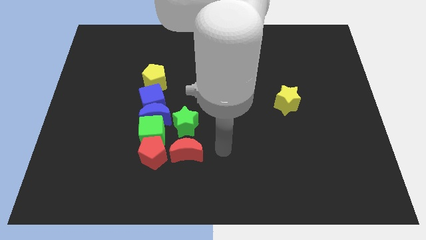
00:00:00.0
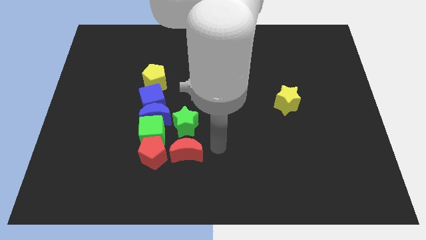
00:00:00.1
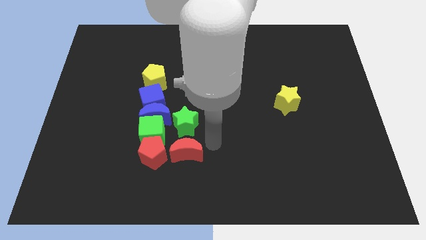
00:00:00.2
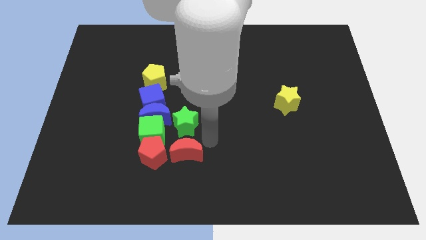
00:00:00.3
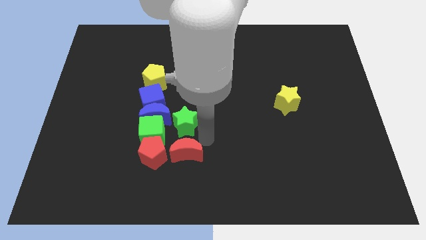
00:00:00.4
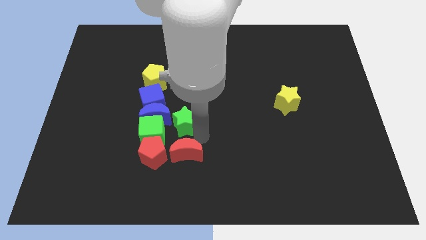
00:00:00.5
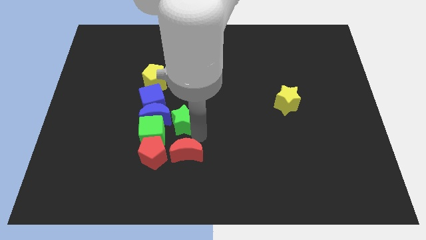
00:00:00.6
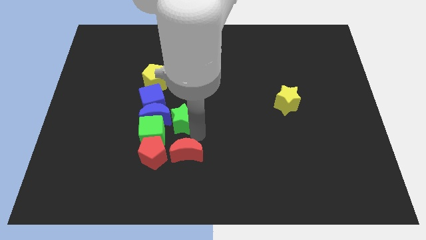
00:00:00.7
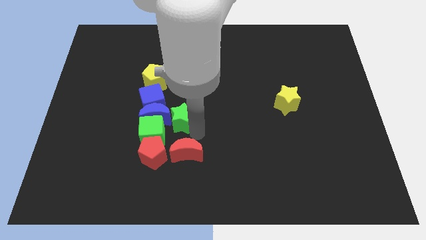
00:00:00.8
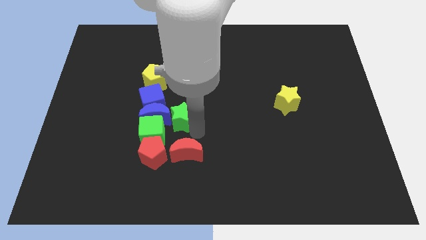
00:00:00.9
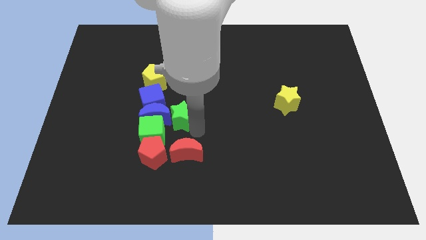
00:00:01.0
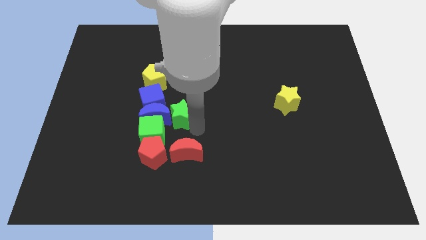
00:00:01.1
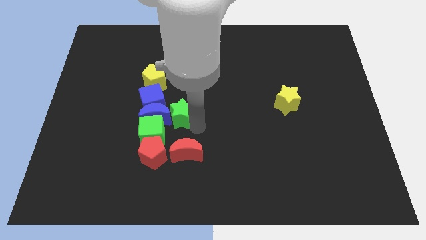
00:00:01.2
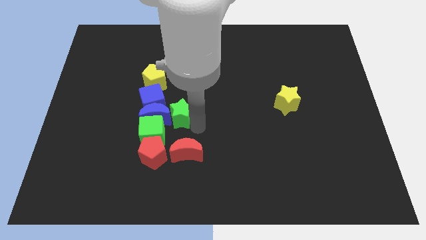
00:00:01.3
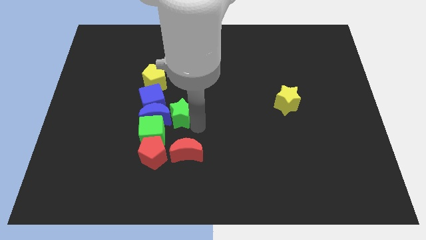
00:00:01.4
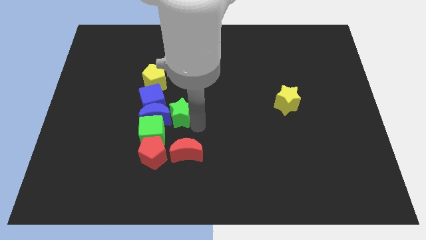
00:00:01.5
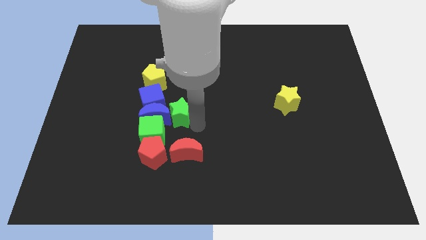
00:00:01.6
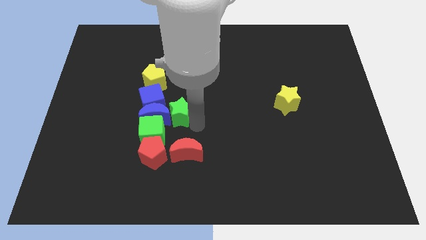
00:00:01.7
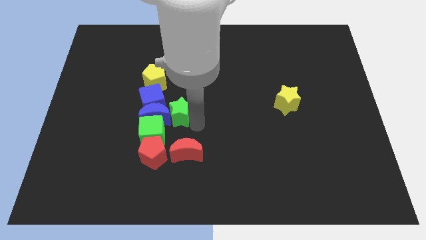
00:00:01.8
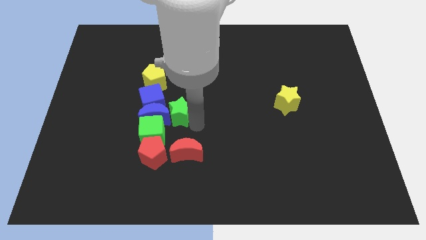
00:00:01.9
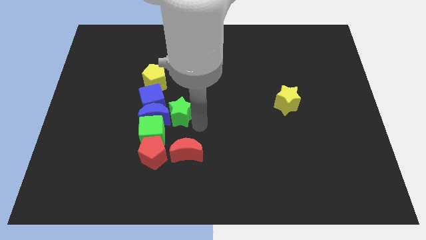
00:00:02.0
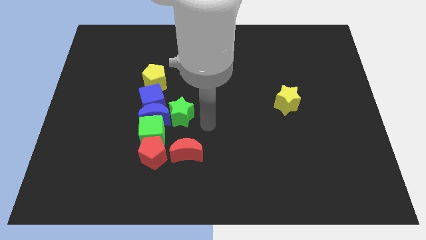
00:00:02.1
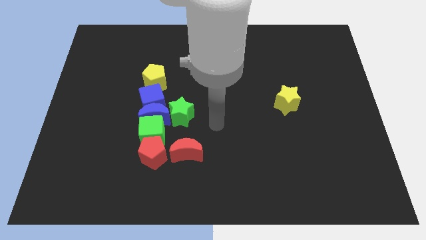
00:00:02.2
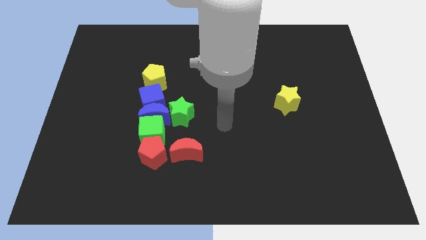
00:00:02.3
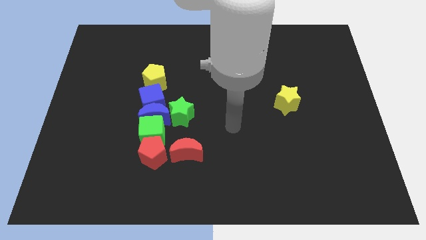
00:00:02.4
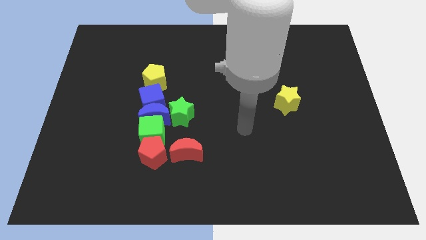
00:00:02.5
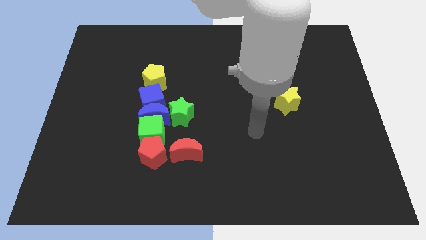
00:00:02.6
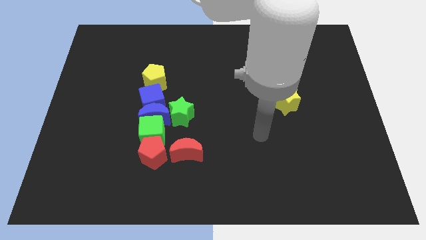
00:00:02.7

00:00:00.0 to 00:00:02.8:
move the green star close to blue crescent

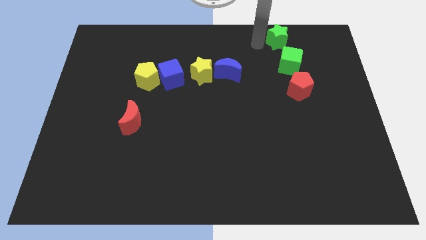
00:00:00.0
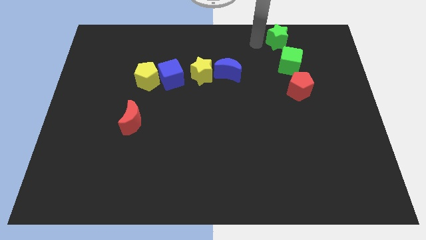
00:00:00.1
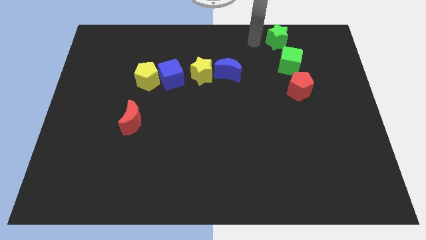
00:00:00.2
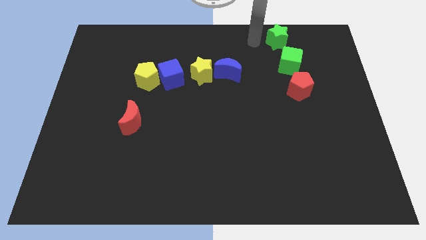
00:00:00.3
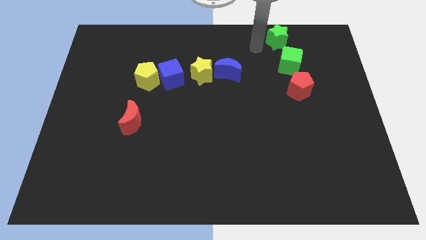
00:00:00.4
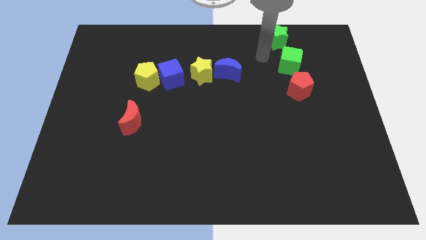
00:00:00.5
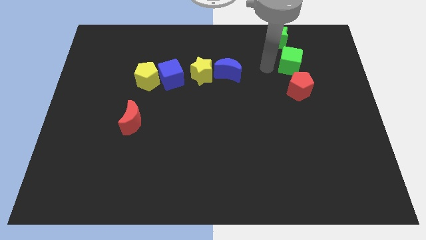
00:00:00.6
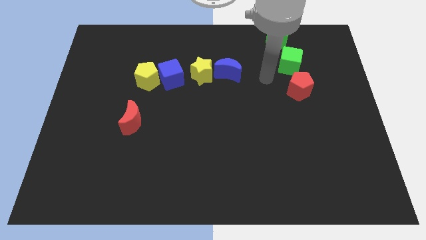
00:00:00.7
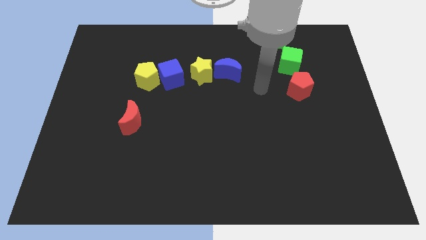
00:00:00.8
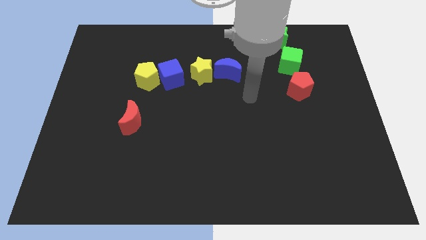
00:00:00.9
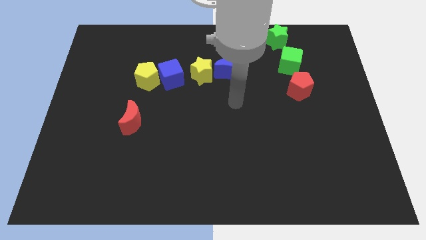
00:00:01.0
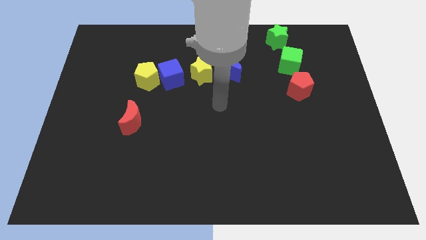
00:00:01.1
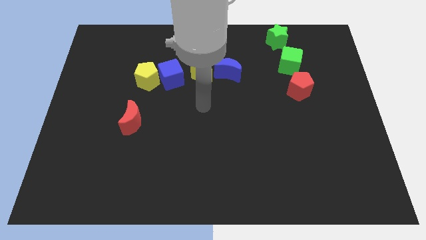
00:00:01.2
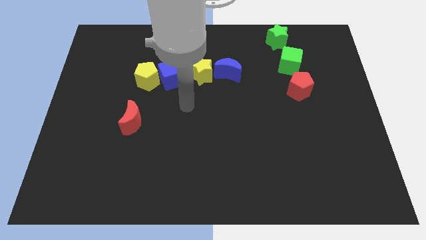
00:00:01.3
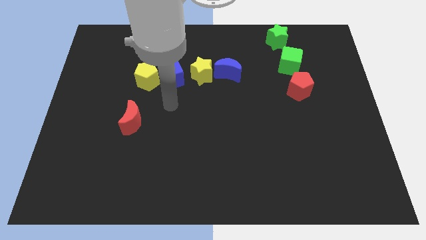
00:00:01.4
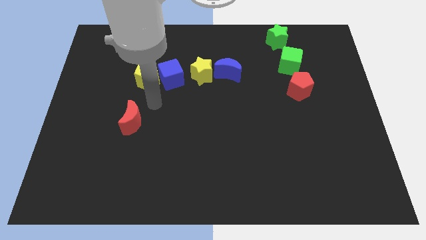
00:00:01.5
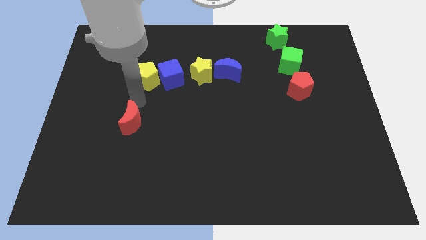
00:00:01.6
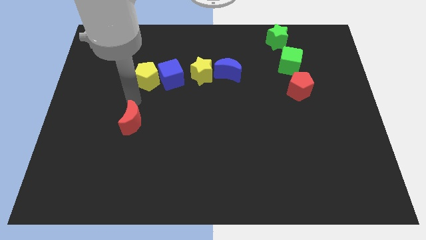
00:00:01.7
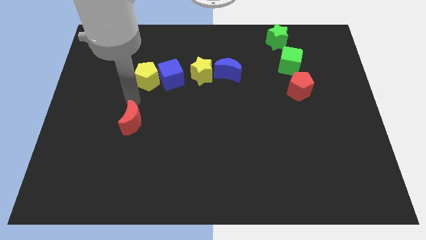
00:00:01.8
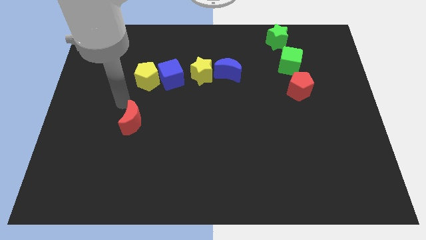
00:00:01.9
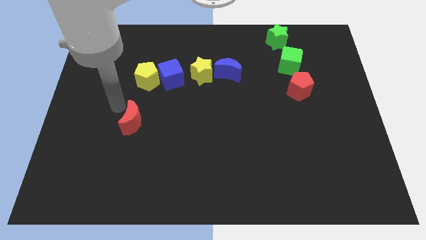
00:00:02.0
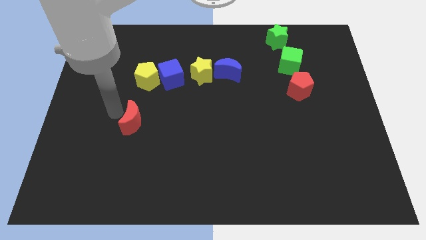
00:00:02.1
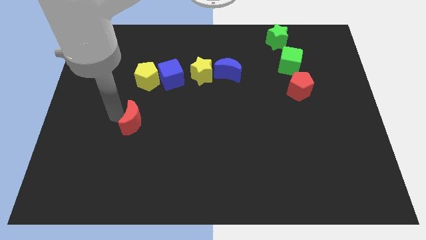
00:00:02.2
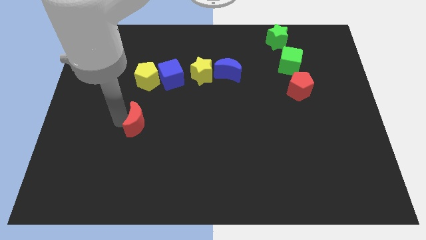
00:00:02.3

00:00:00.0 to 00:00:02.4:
move your arm near red crescent

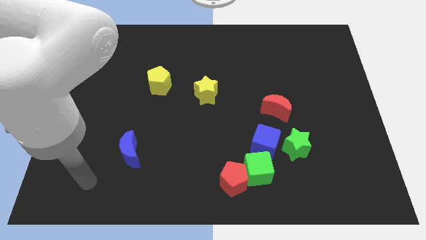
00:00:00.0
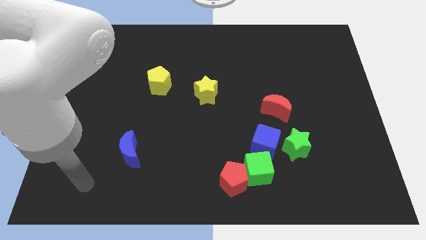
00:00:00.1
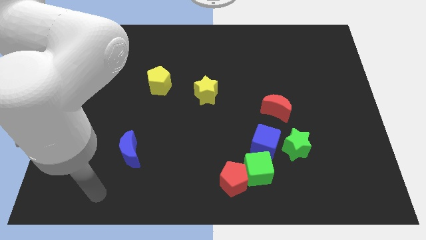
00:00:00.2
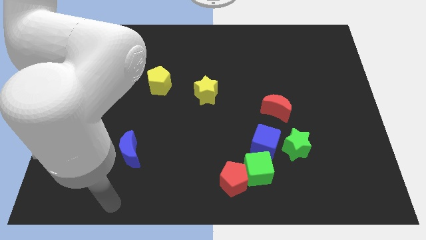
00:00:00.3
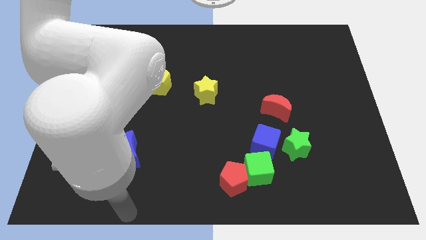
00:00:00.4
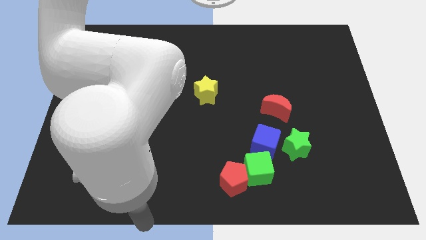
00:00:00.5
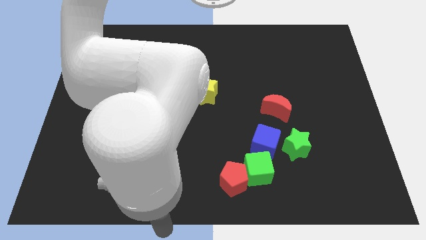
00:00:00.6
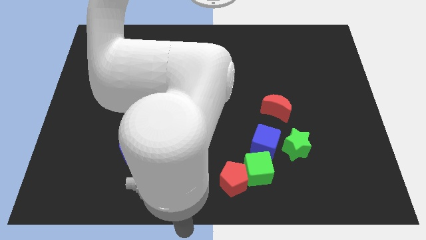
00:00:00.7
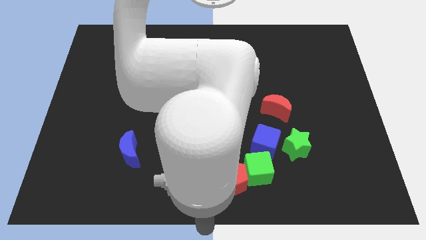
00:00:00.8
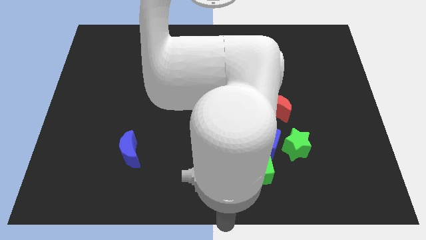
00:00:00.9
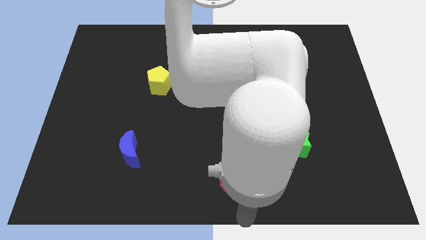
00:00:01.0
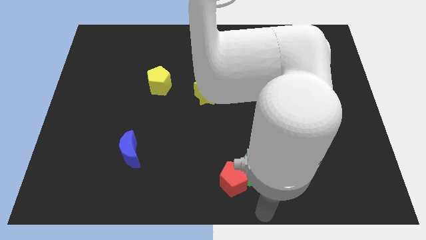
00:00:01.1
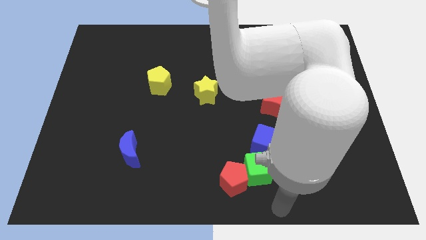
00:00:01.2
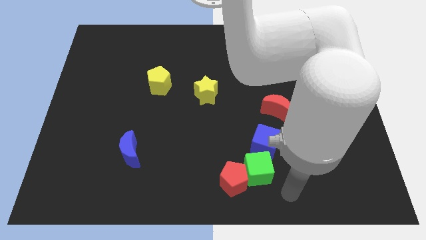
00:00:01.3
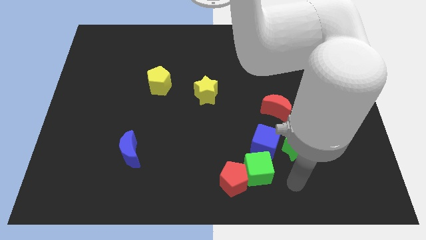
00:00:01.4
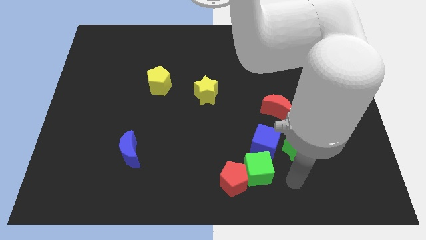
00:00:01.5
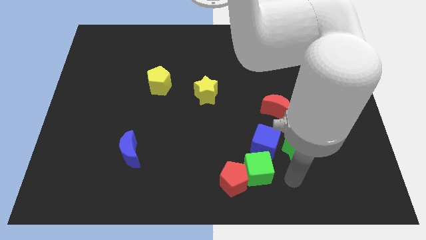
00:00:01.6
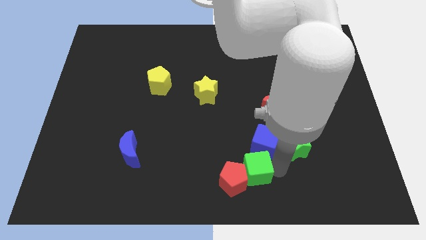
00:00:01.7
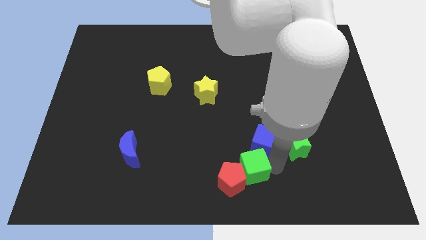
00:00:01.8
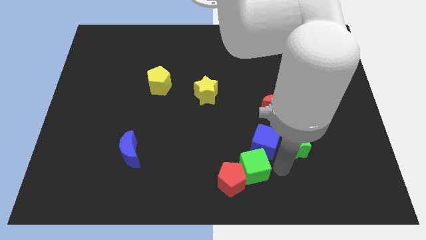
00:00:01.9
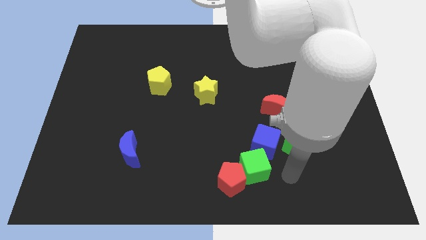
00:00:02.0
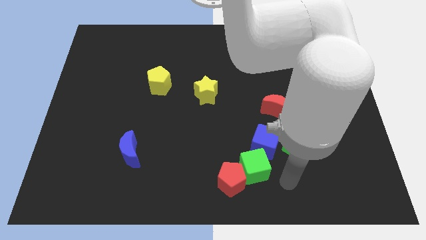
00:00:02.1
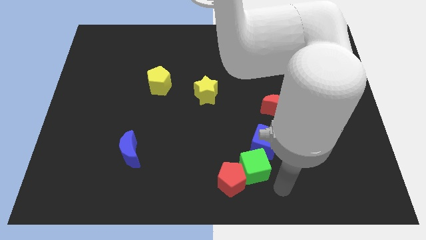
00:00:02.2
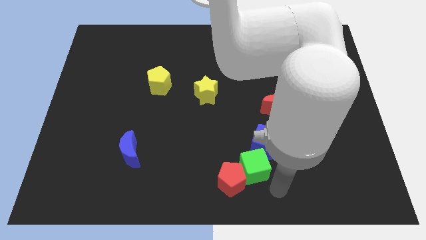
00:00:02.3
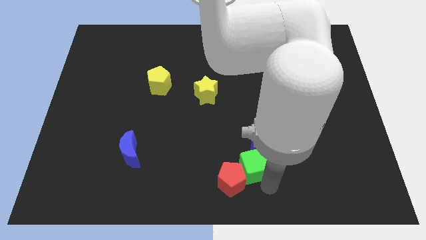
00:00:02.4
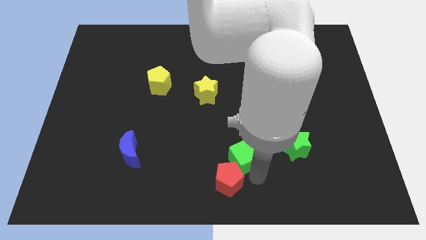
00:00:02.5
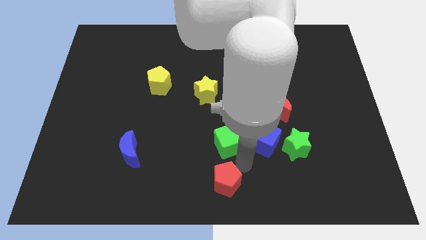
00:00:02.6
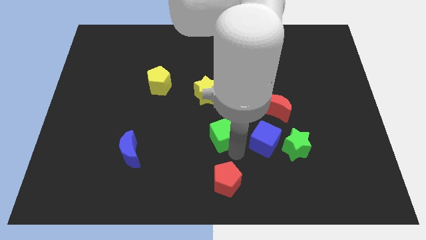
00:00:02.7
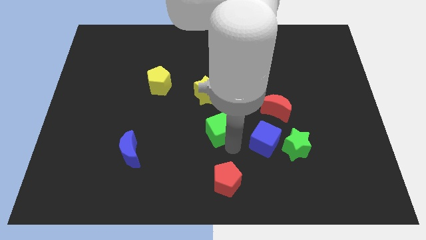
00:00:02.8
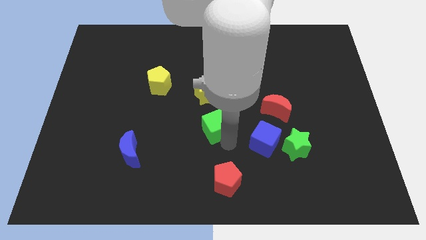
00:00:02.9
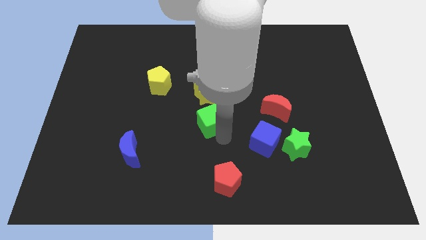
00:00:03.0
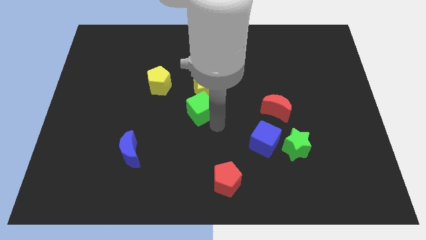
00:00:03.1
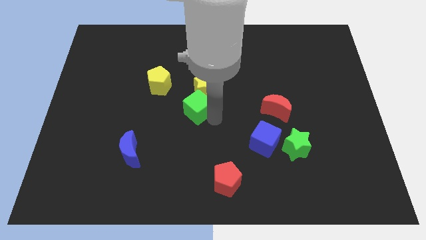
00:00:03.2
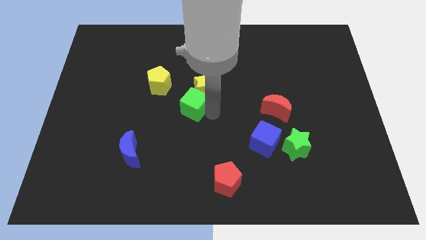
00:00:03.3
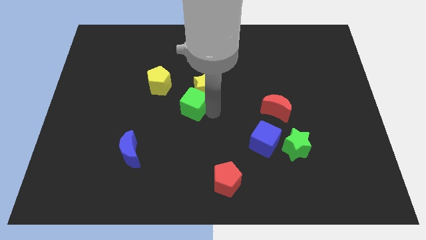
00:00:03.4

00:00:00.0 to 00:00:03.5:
place green cube to the center of the board

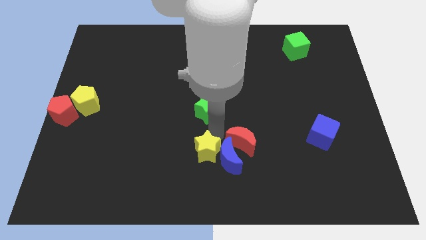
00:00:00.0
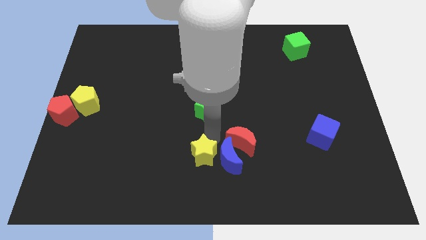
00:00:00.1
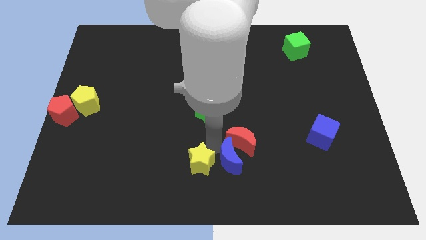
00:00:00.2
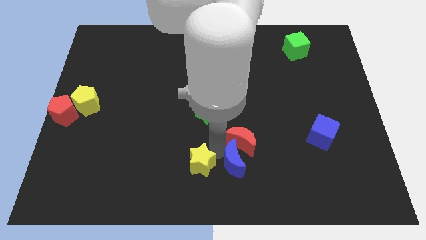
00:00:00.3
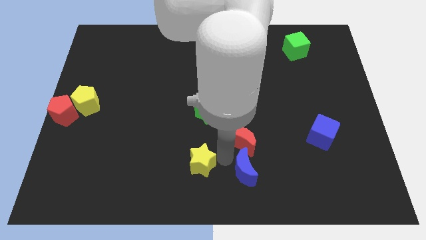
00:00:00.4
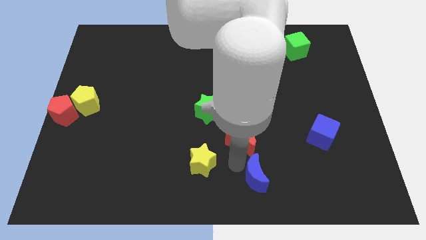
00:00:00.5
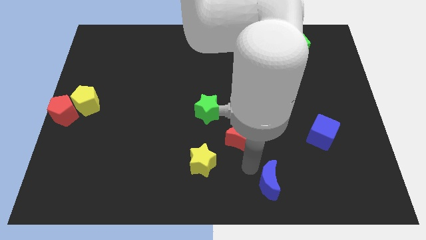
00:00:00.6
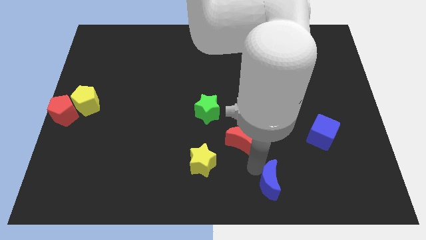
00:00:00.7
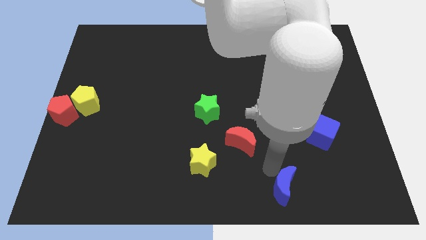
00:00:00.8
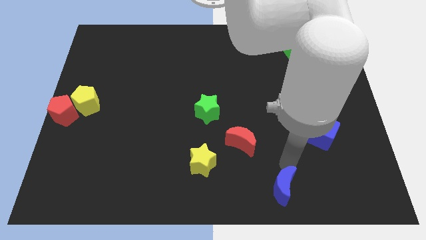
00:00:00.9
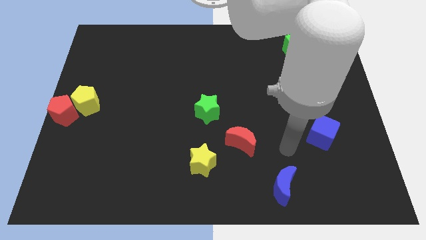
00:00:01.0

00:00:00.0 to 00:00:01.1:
move the blue moon away from the red moon
